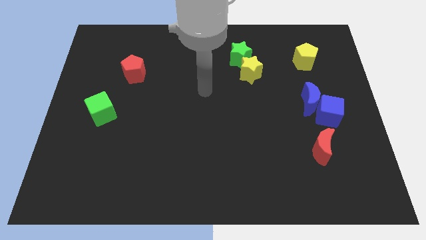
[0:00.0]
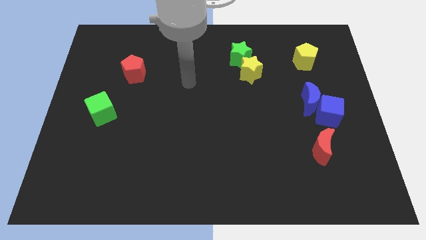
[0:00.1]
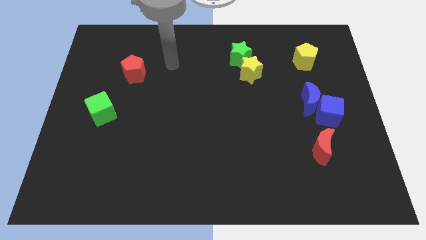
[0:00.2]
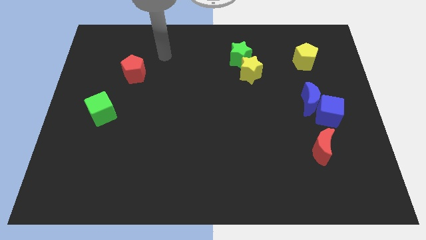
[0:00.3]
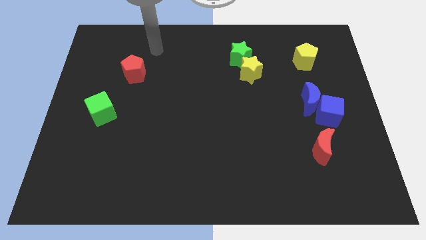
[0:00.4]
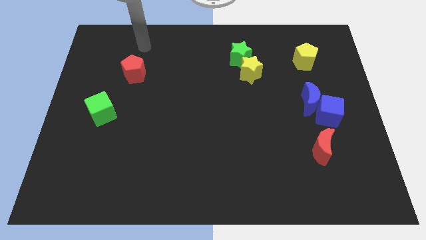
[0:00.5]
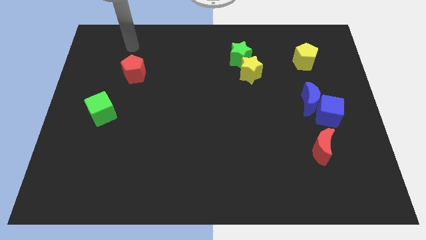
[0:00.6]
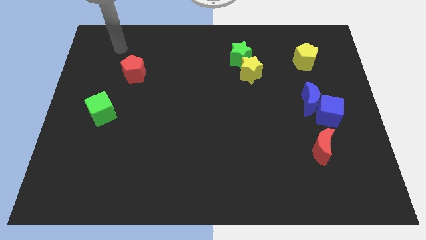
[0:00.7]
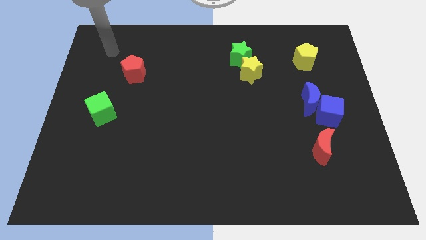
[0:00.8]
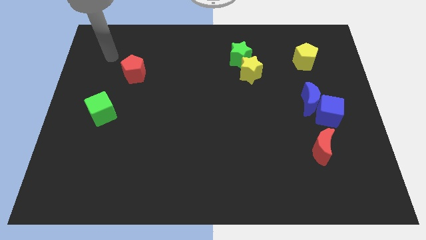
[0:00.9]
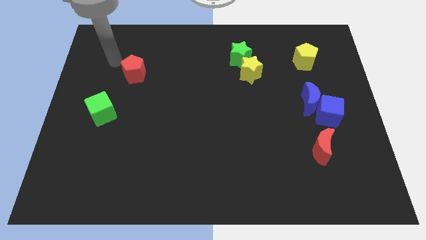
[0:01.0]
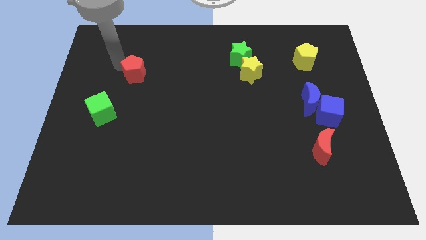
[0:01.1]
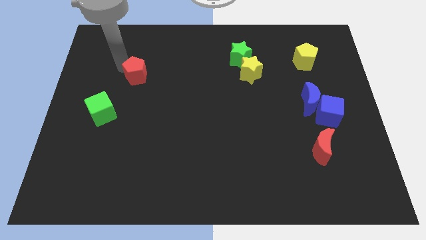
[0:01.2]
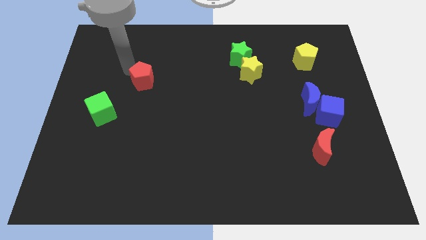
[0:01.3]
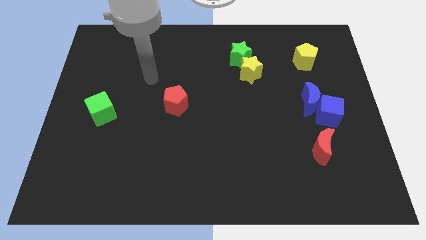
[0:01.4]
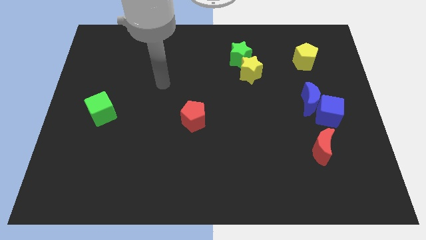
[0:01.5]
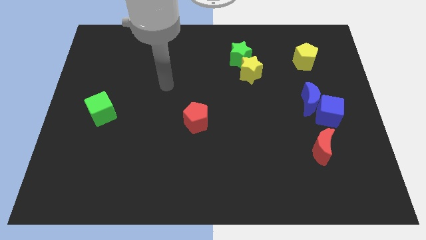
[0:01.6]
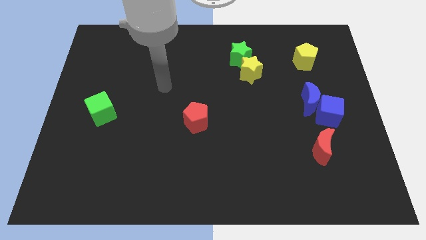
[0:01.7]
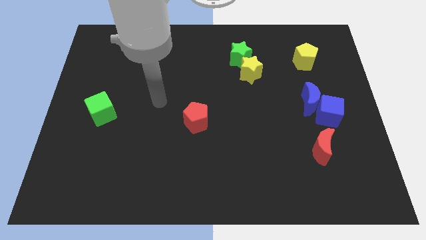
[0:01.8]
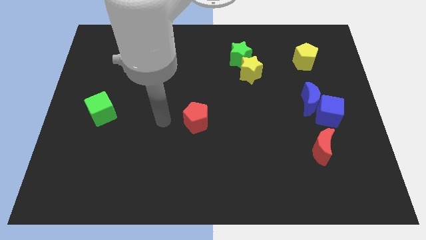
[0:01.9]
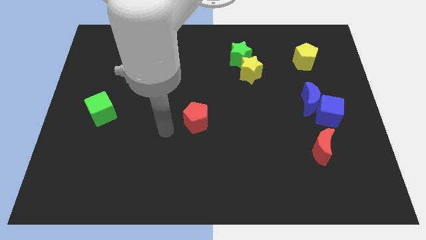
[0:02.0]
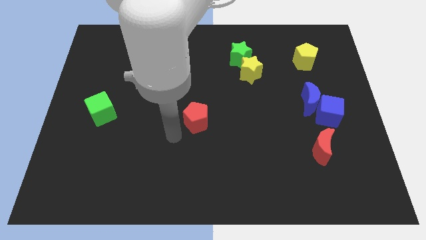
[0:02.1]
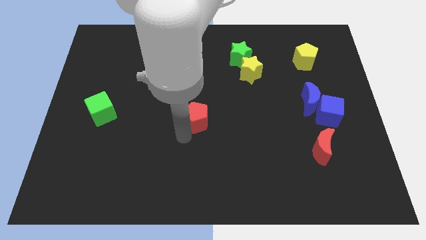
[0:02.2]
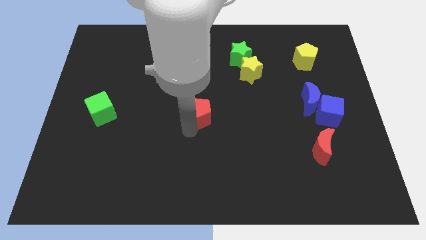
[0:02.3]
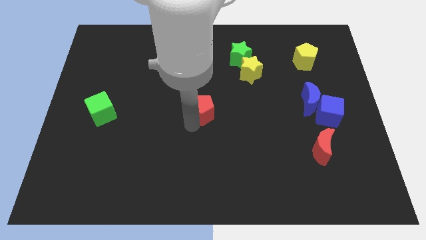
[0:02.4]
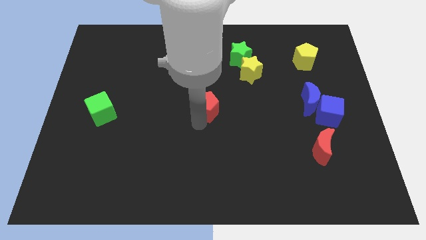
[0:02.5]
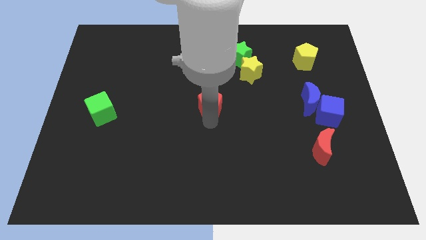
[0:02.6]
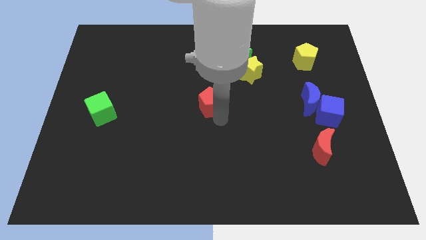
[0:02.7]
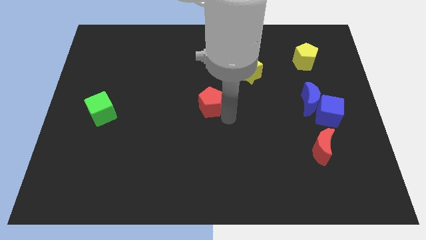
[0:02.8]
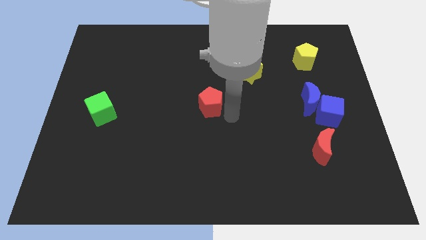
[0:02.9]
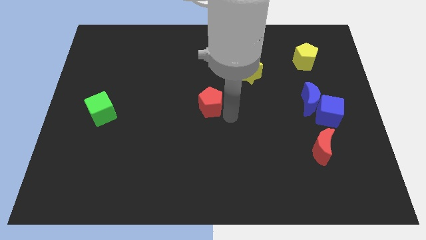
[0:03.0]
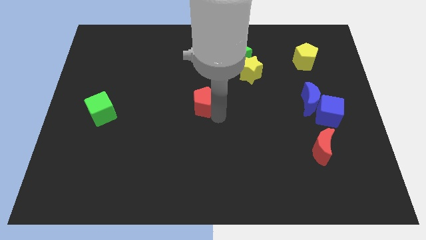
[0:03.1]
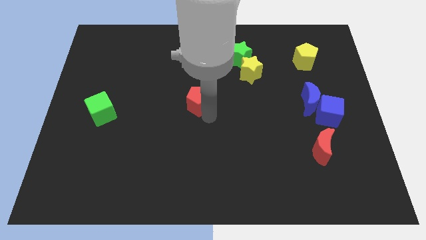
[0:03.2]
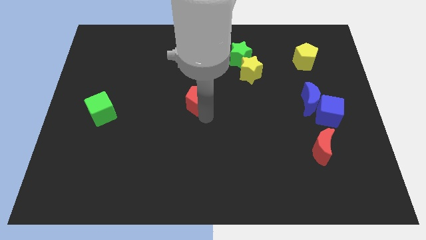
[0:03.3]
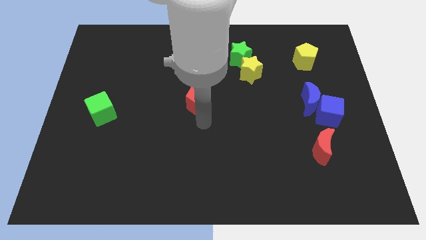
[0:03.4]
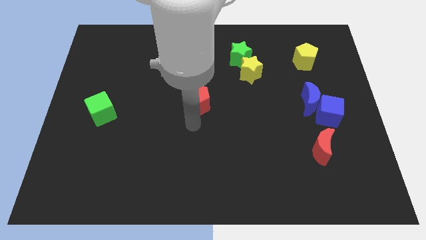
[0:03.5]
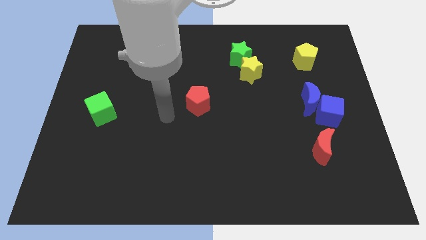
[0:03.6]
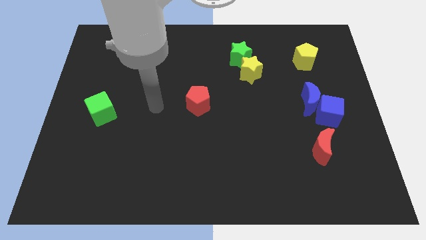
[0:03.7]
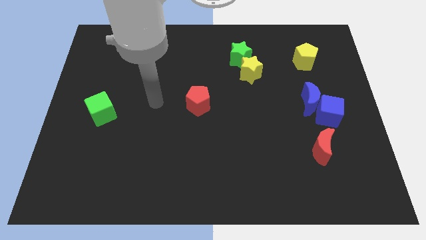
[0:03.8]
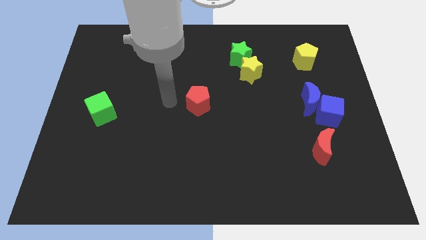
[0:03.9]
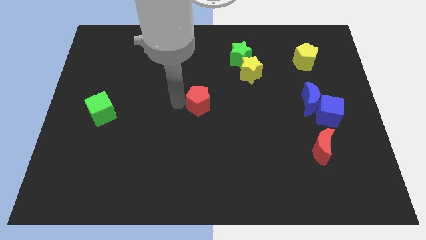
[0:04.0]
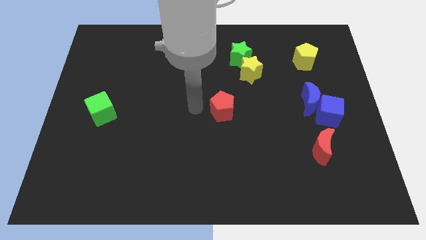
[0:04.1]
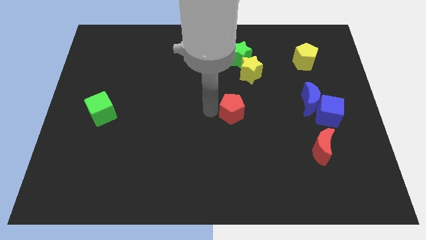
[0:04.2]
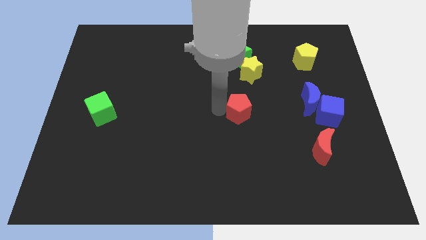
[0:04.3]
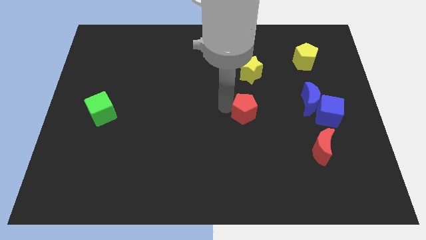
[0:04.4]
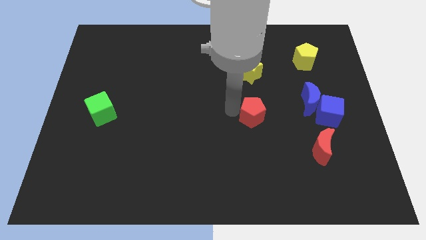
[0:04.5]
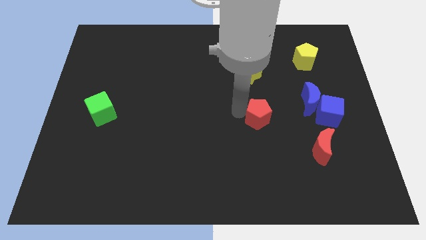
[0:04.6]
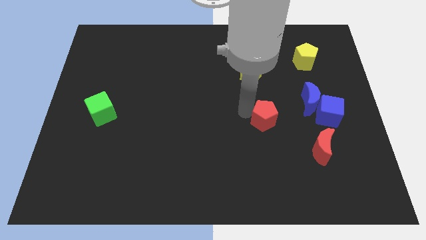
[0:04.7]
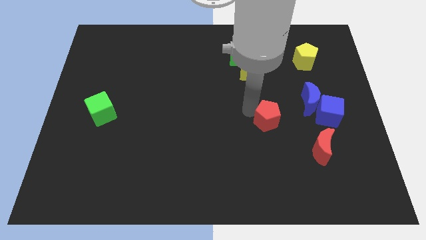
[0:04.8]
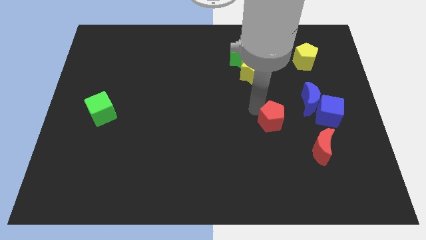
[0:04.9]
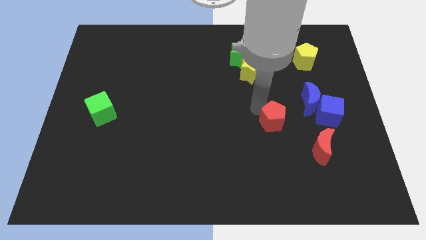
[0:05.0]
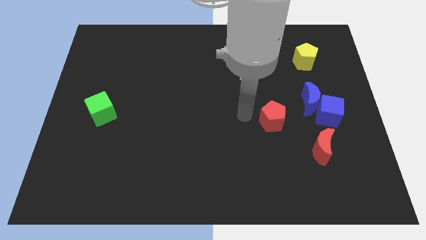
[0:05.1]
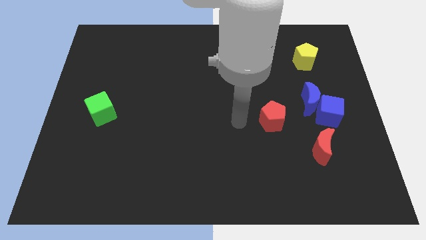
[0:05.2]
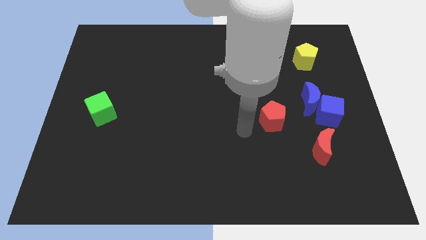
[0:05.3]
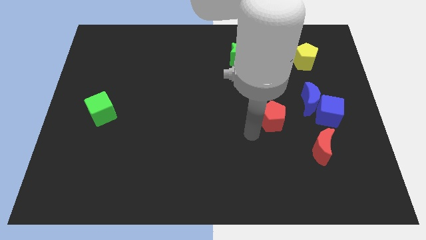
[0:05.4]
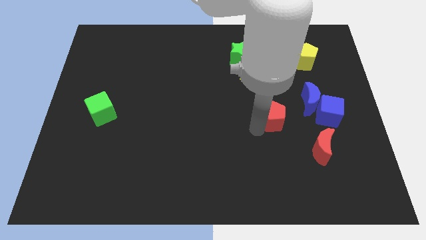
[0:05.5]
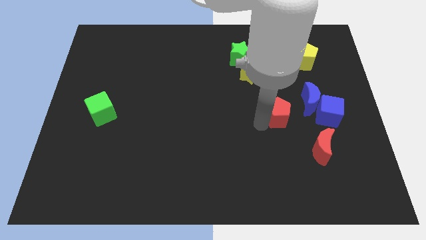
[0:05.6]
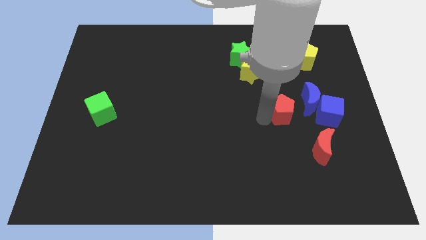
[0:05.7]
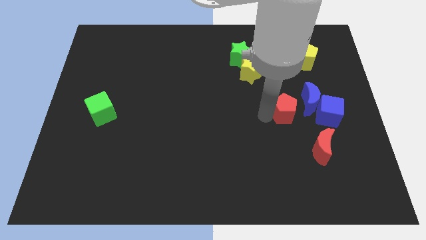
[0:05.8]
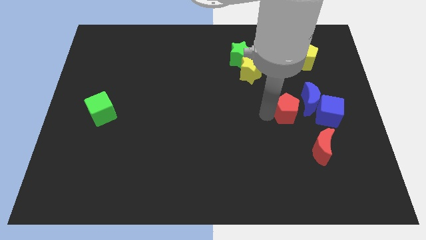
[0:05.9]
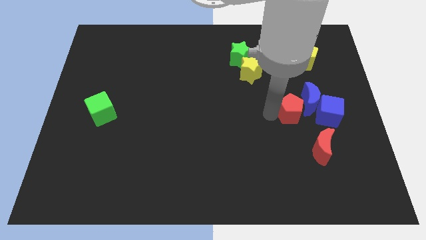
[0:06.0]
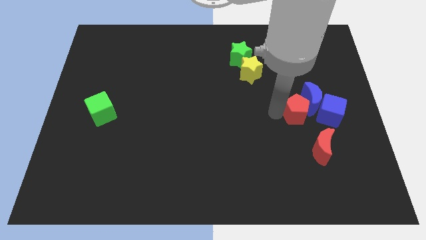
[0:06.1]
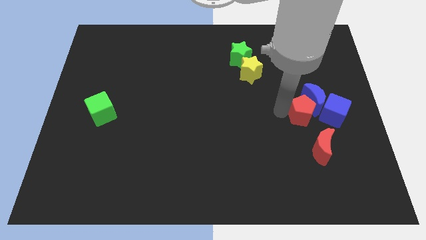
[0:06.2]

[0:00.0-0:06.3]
push the red pentagon towards the blue moon

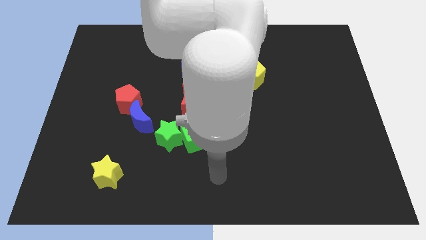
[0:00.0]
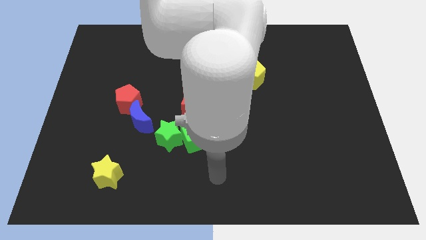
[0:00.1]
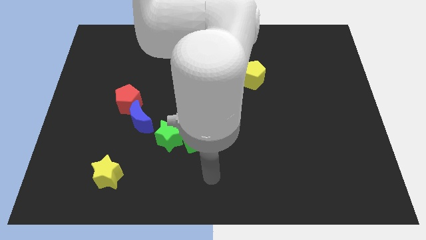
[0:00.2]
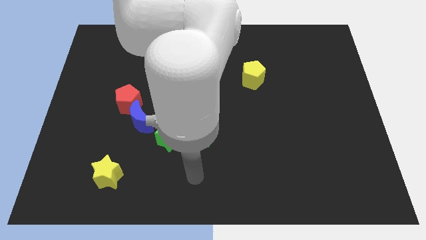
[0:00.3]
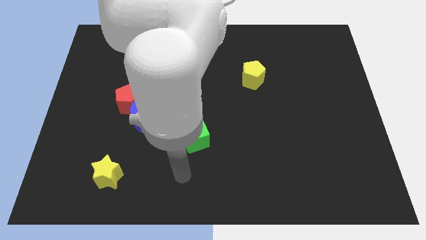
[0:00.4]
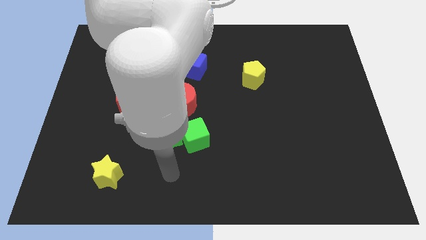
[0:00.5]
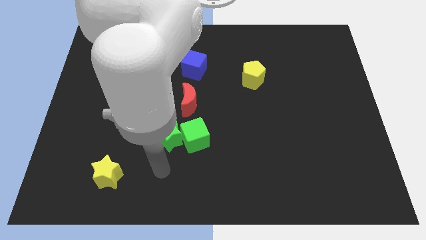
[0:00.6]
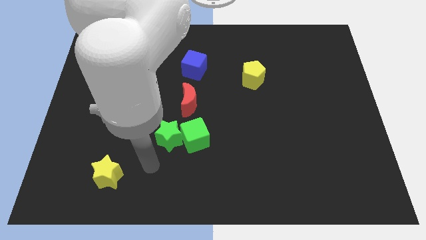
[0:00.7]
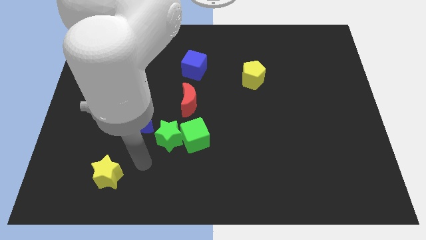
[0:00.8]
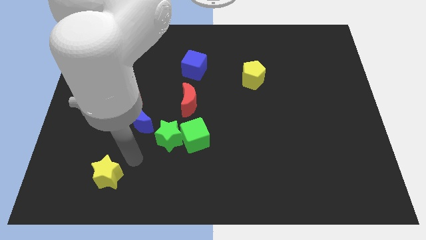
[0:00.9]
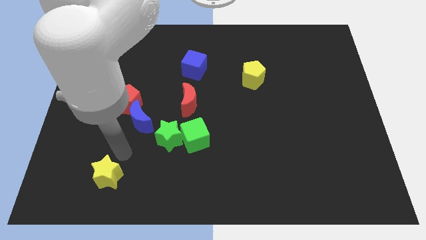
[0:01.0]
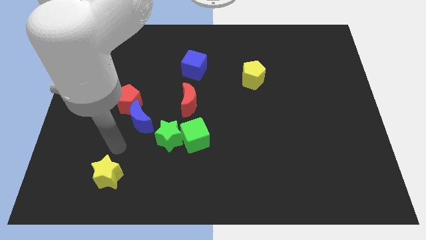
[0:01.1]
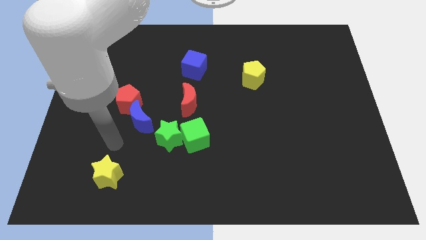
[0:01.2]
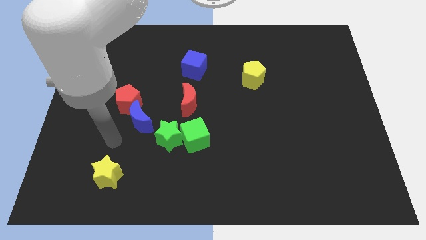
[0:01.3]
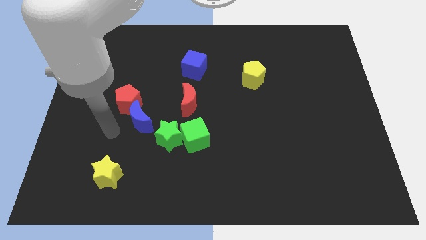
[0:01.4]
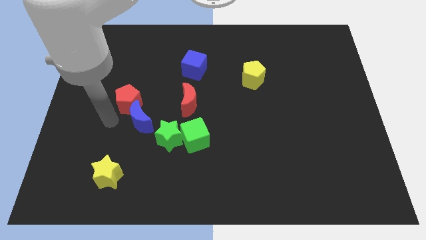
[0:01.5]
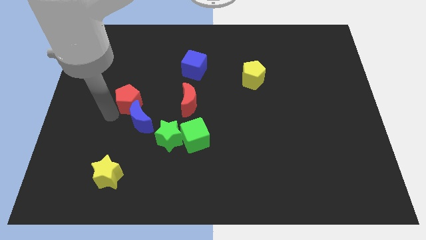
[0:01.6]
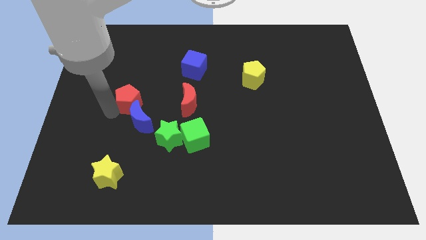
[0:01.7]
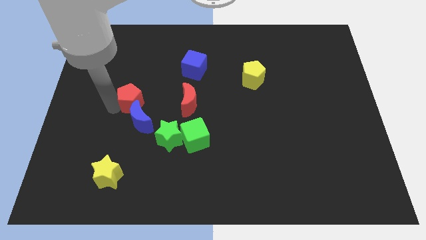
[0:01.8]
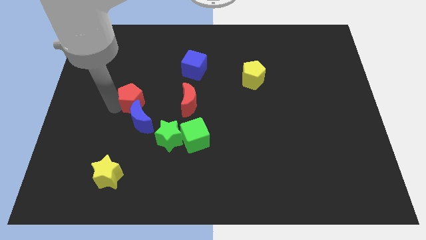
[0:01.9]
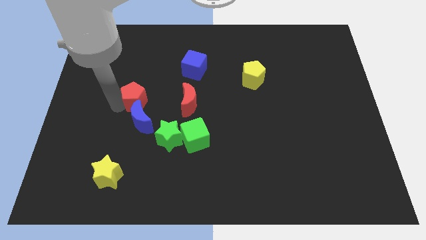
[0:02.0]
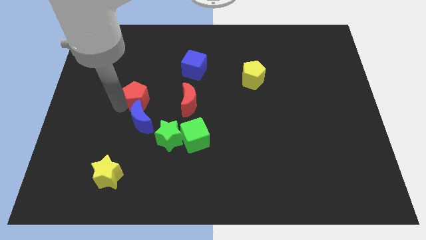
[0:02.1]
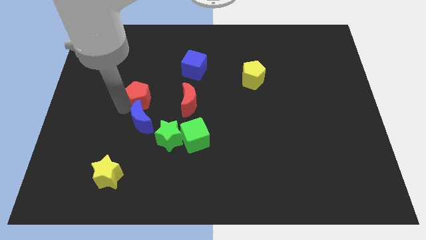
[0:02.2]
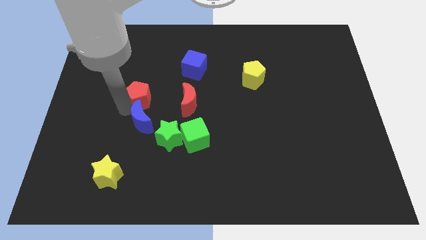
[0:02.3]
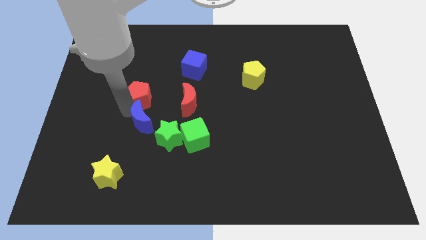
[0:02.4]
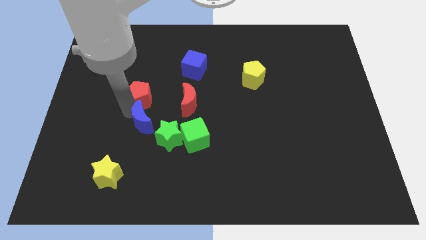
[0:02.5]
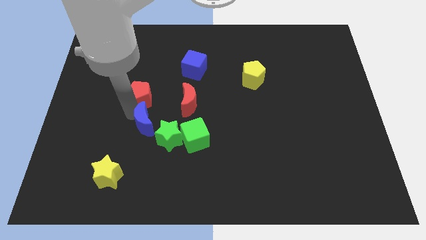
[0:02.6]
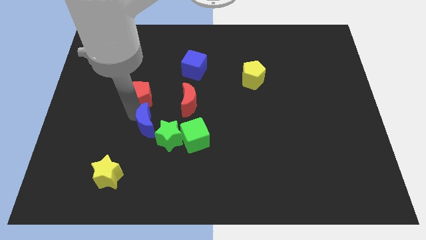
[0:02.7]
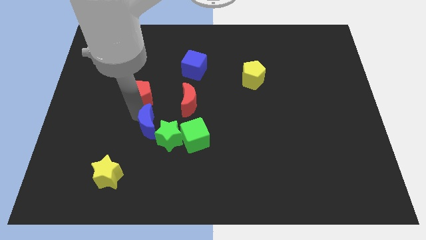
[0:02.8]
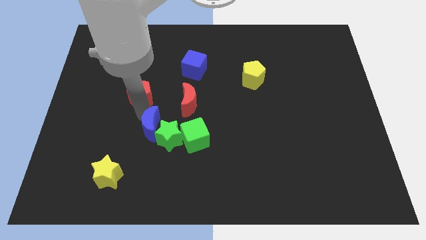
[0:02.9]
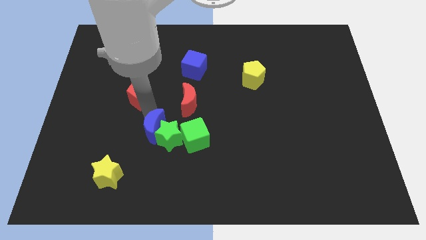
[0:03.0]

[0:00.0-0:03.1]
push the blue moon to the green star
